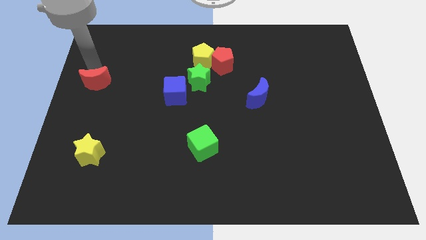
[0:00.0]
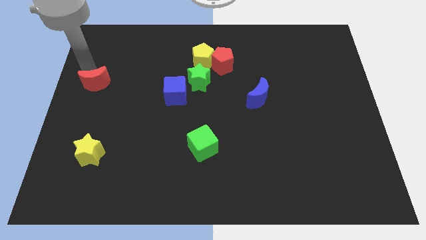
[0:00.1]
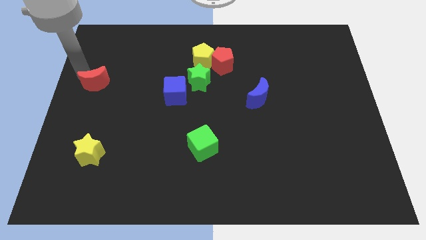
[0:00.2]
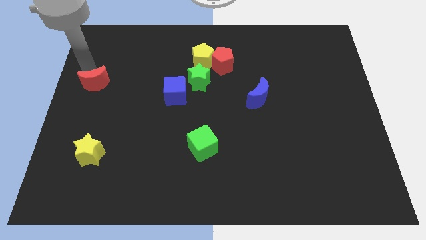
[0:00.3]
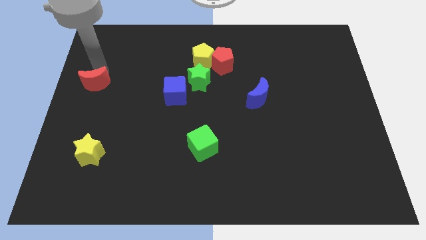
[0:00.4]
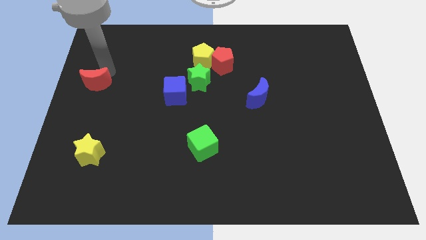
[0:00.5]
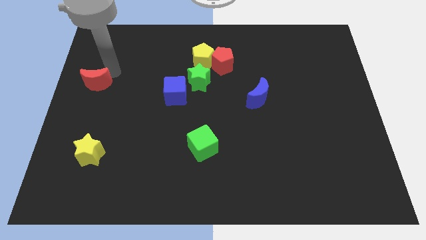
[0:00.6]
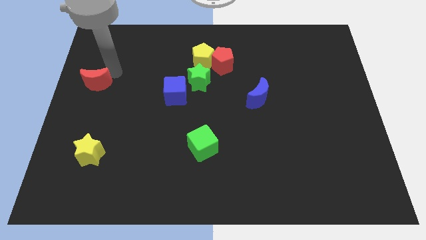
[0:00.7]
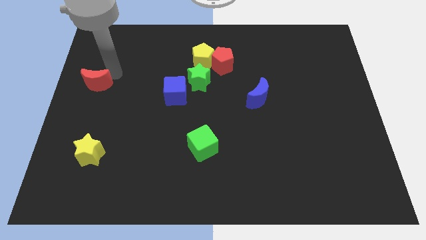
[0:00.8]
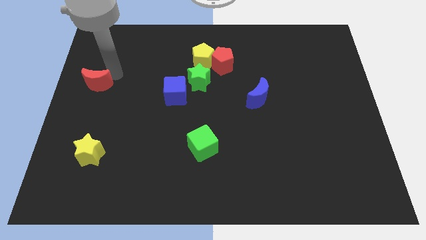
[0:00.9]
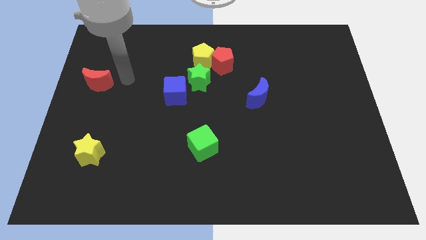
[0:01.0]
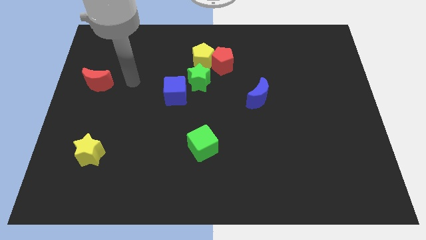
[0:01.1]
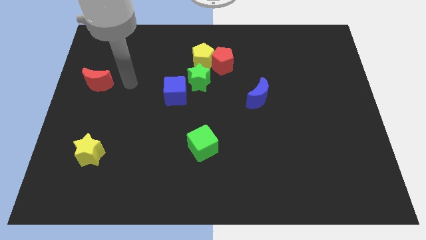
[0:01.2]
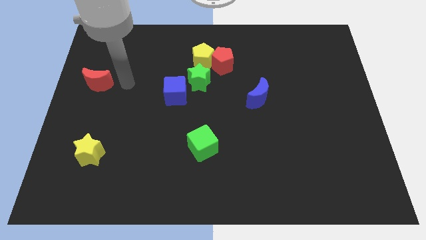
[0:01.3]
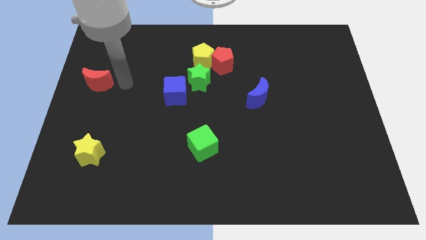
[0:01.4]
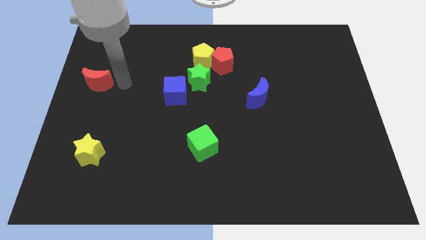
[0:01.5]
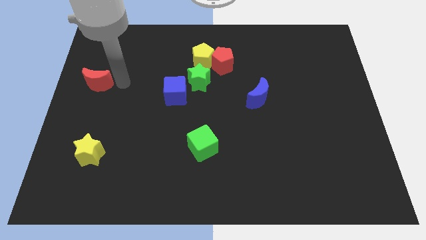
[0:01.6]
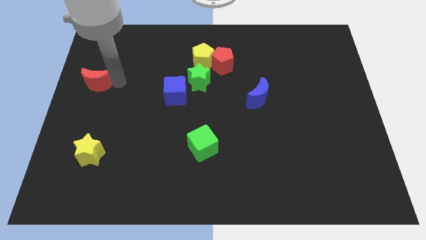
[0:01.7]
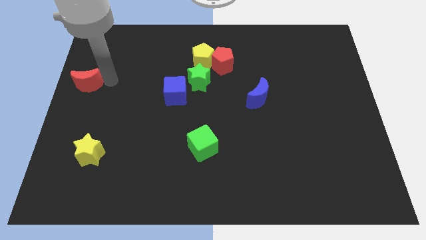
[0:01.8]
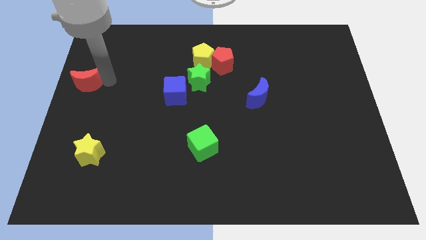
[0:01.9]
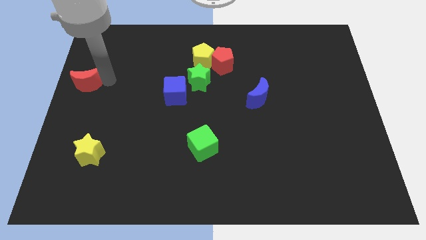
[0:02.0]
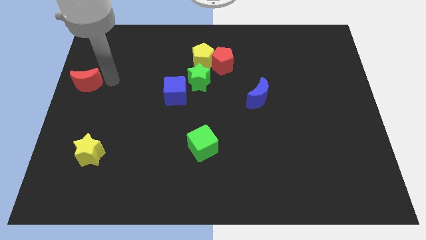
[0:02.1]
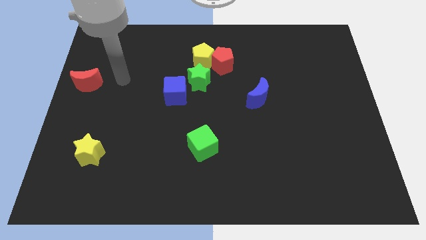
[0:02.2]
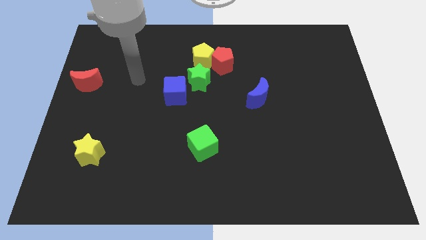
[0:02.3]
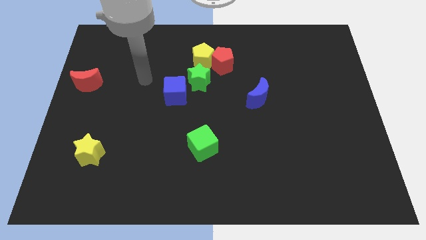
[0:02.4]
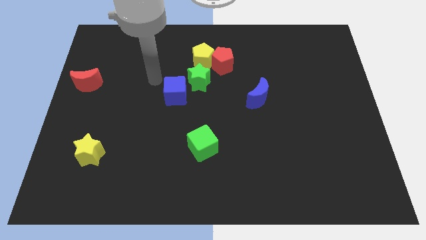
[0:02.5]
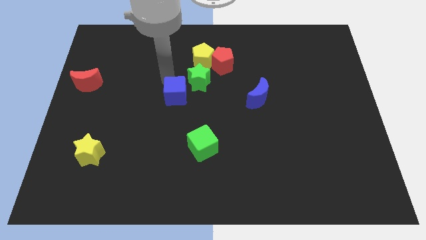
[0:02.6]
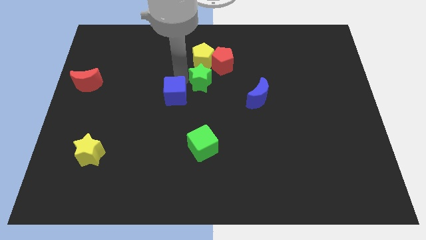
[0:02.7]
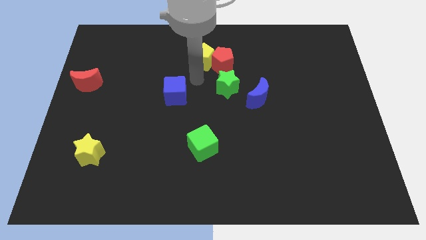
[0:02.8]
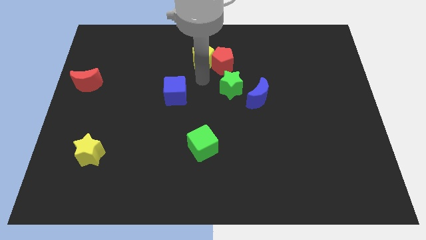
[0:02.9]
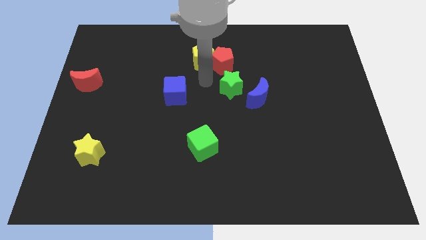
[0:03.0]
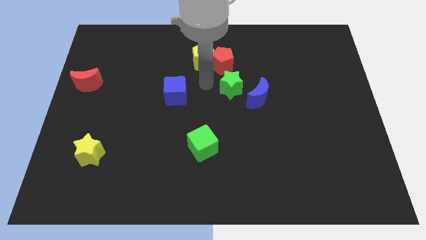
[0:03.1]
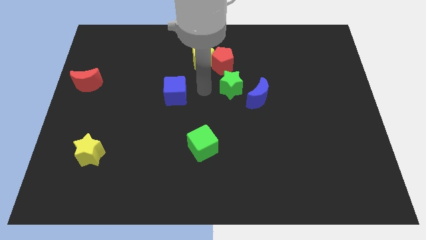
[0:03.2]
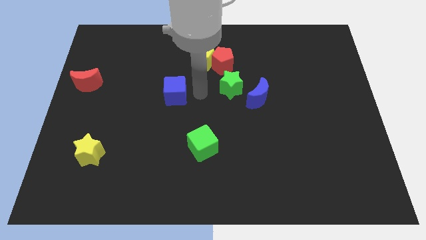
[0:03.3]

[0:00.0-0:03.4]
place your arm right side of blue cube

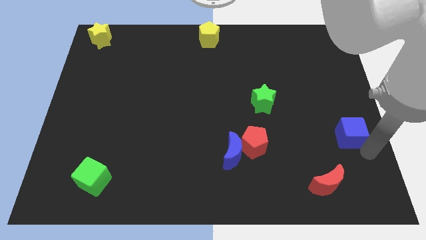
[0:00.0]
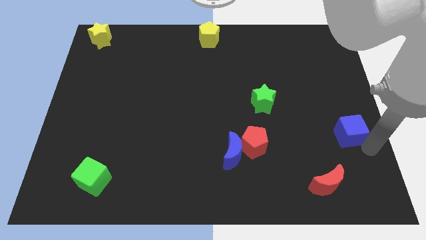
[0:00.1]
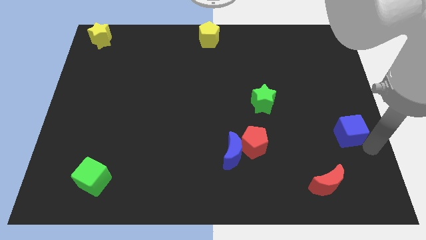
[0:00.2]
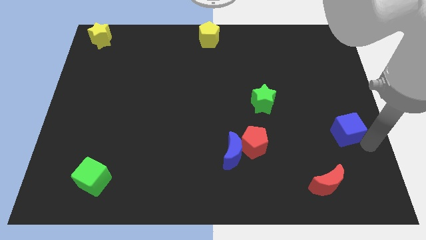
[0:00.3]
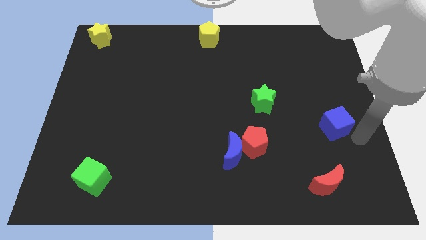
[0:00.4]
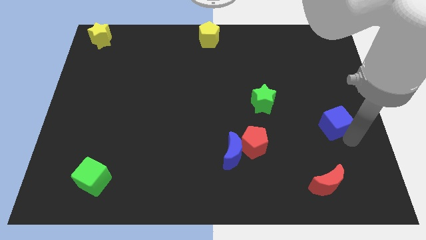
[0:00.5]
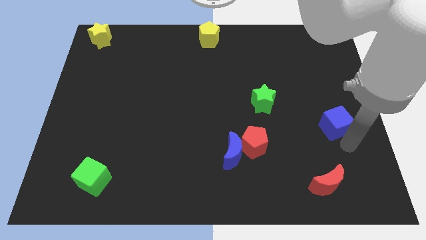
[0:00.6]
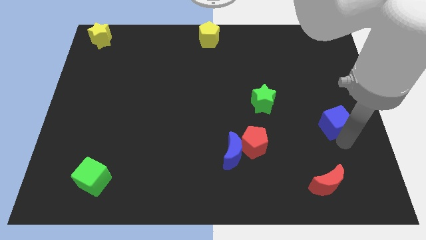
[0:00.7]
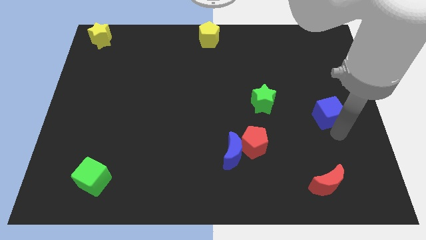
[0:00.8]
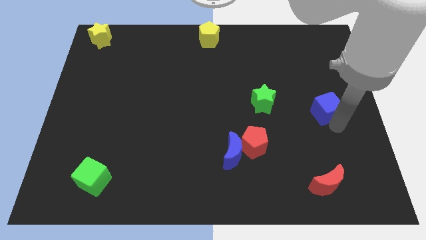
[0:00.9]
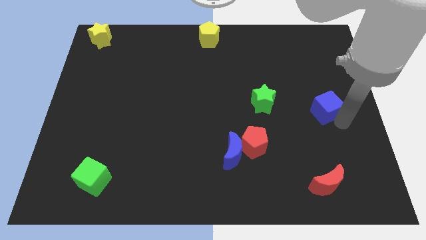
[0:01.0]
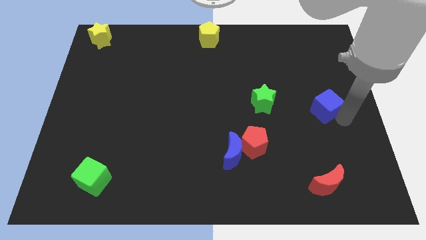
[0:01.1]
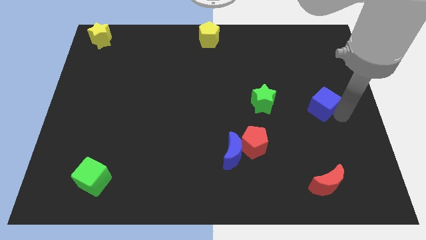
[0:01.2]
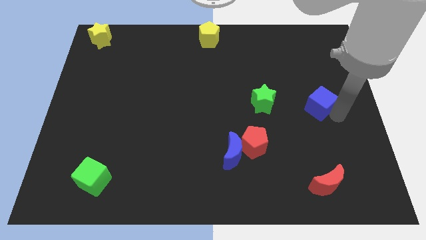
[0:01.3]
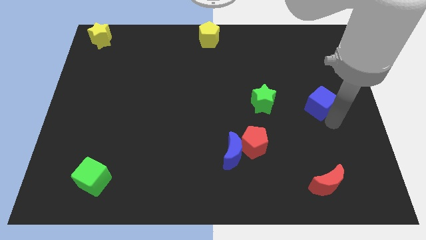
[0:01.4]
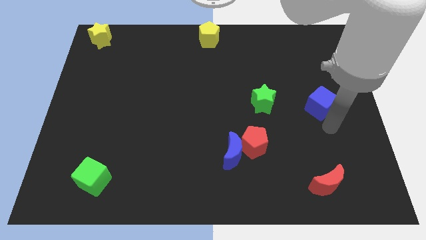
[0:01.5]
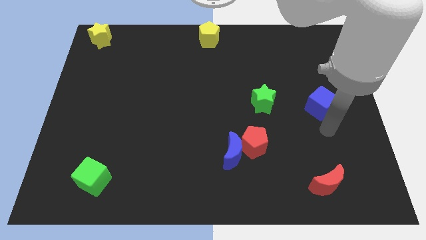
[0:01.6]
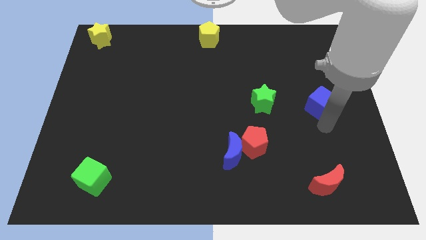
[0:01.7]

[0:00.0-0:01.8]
place the blue cube right to the green star

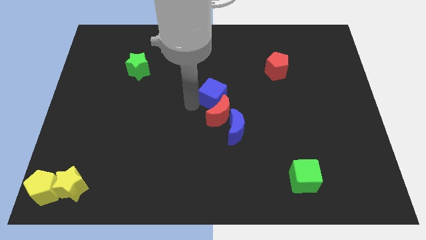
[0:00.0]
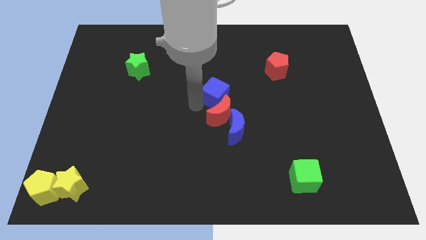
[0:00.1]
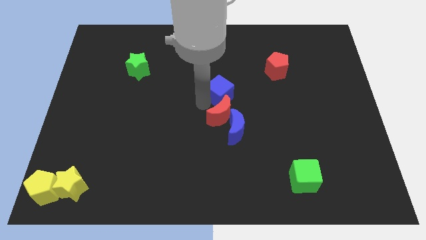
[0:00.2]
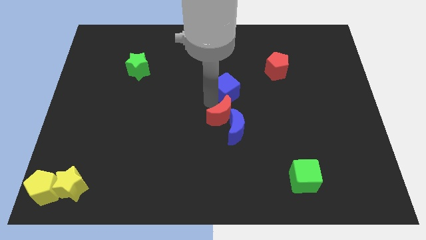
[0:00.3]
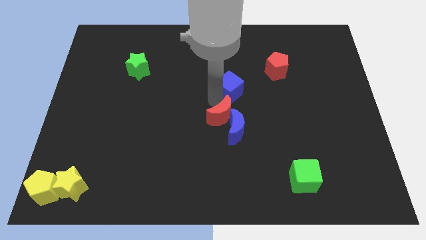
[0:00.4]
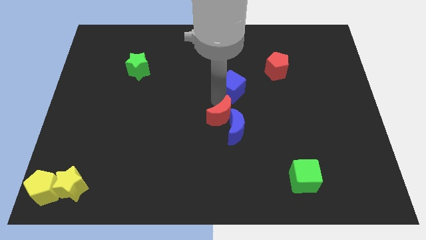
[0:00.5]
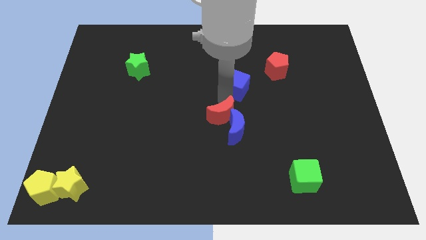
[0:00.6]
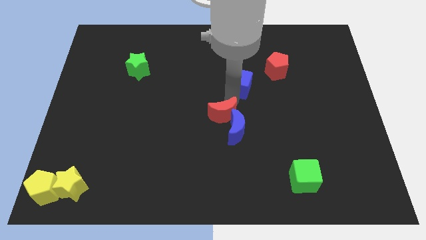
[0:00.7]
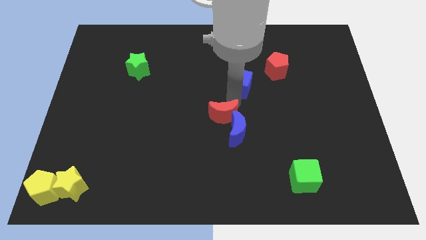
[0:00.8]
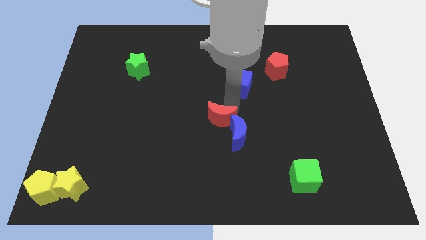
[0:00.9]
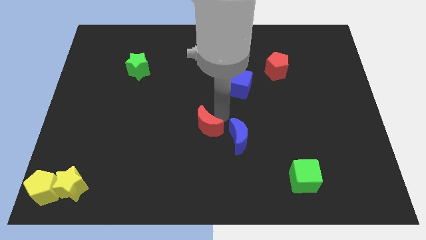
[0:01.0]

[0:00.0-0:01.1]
separate blue cube and red moon

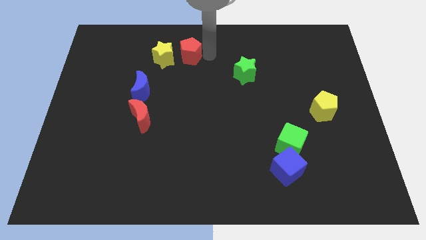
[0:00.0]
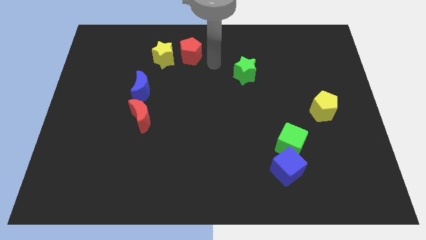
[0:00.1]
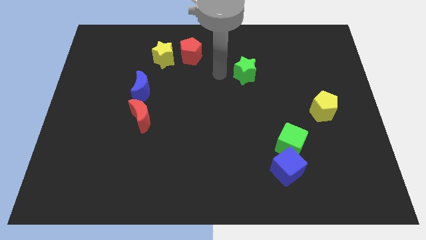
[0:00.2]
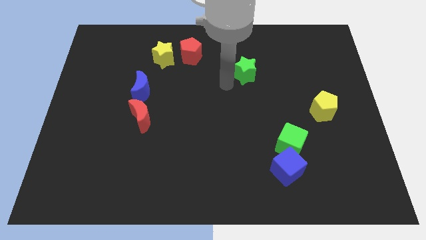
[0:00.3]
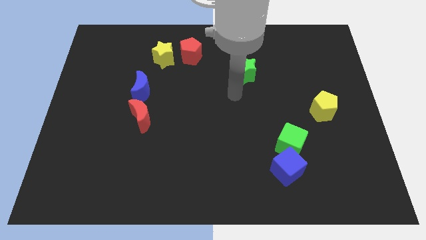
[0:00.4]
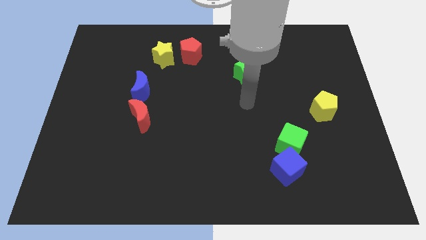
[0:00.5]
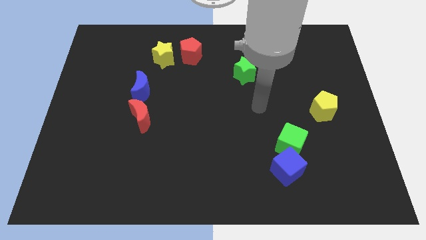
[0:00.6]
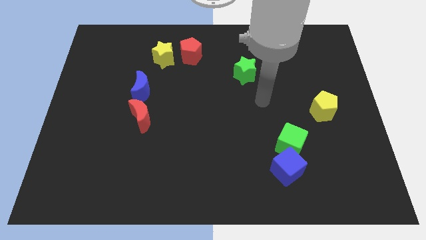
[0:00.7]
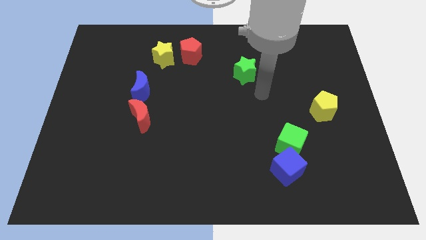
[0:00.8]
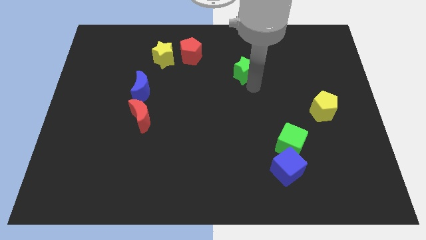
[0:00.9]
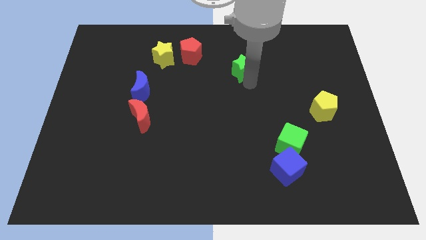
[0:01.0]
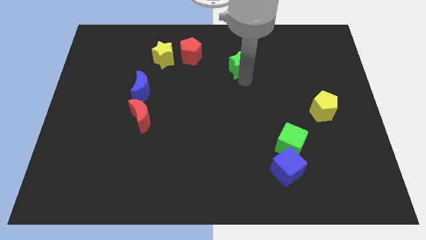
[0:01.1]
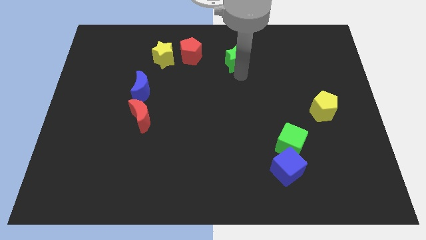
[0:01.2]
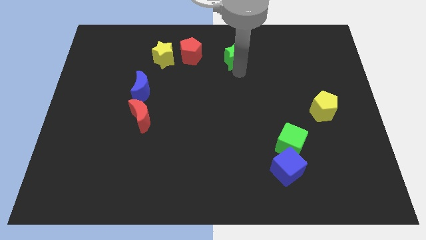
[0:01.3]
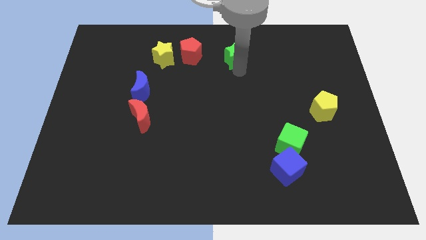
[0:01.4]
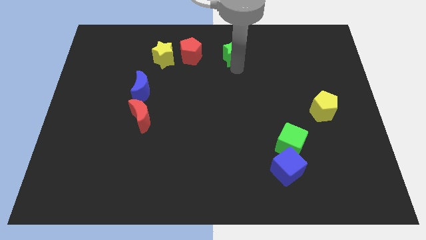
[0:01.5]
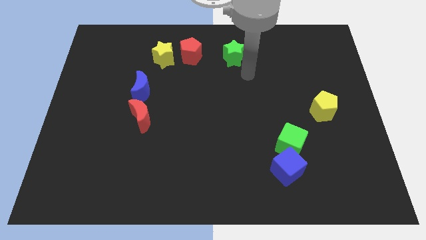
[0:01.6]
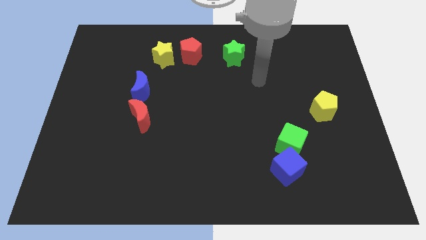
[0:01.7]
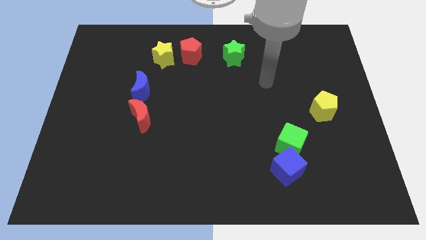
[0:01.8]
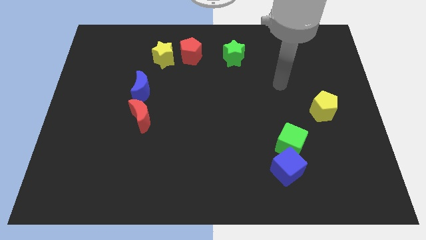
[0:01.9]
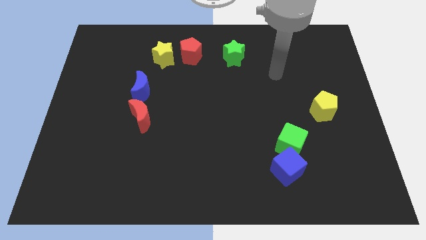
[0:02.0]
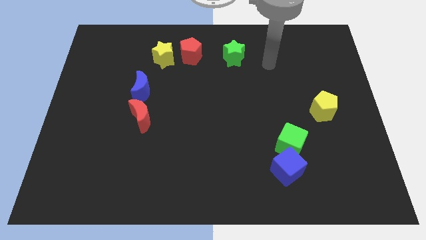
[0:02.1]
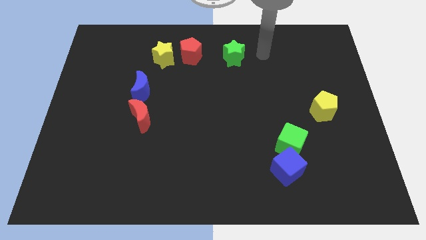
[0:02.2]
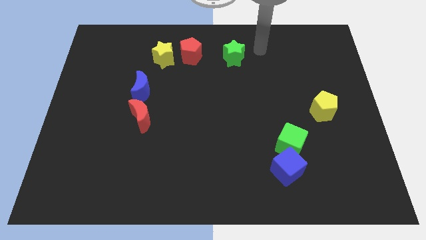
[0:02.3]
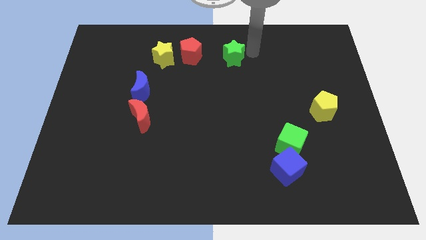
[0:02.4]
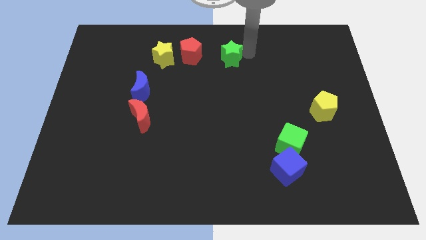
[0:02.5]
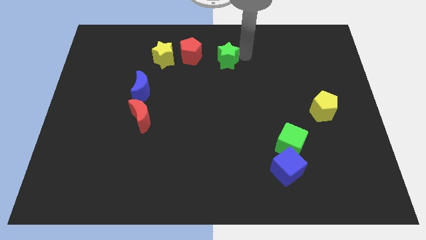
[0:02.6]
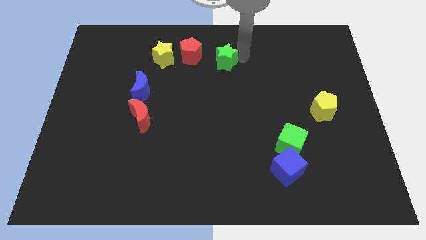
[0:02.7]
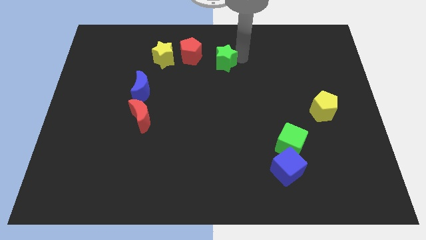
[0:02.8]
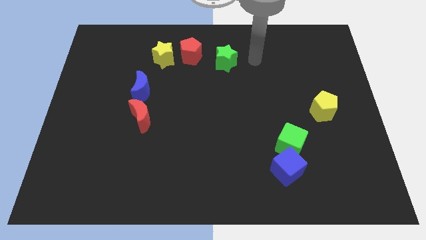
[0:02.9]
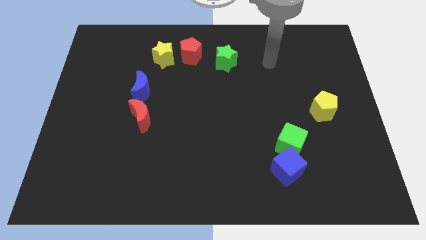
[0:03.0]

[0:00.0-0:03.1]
put the green star on the right side of the red pentagon
